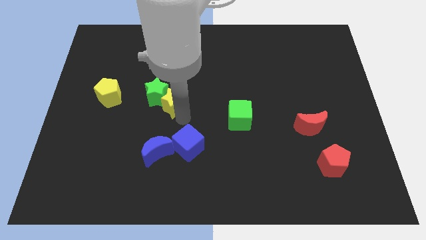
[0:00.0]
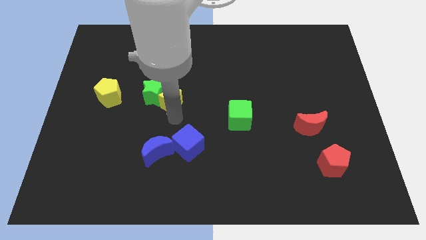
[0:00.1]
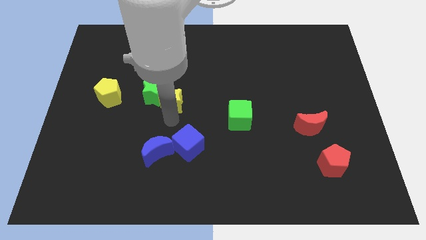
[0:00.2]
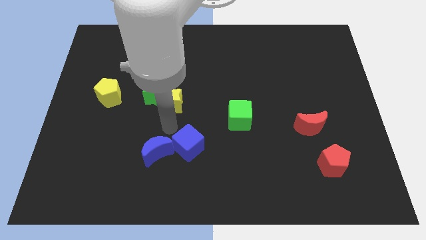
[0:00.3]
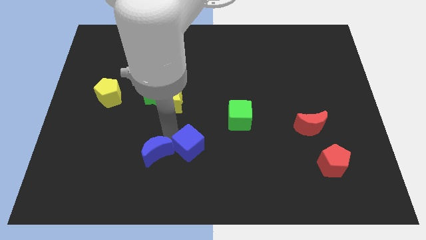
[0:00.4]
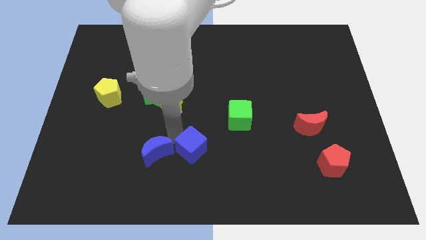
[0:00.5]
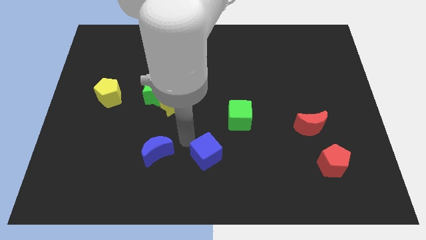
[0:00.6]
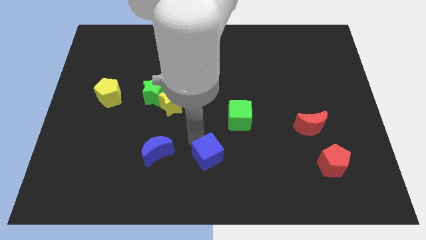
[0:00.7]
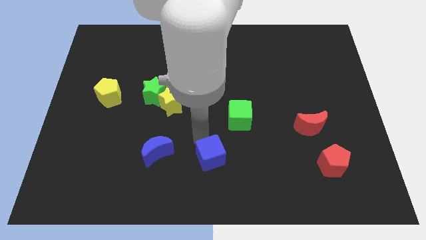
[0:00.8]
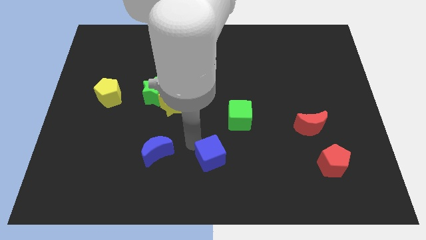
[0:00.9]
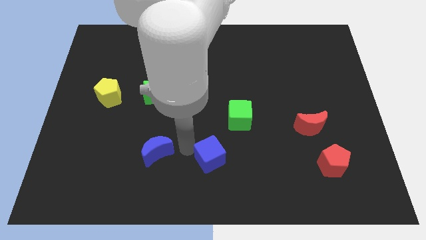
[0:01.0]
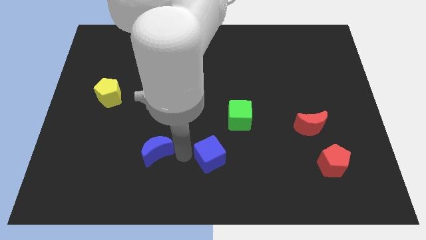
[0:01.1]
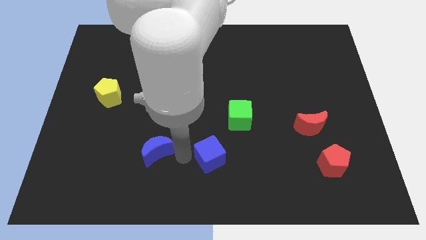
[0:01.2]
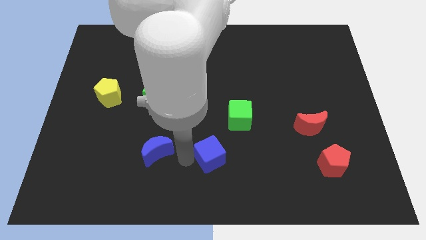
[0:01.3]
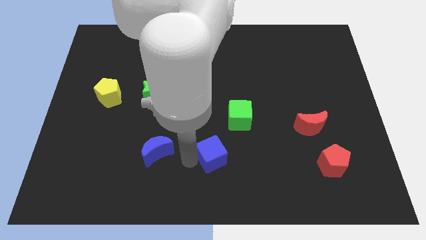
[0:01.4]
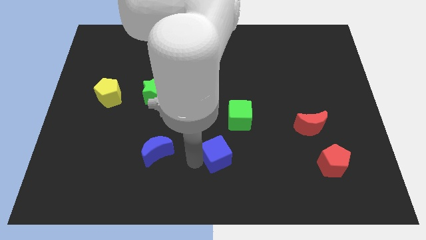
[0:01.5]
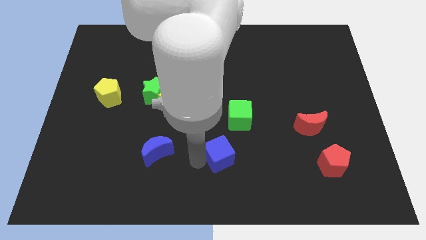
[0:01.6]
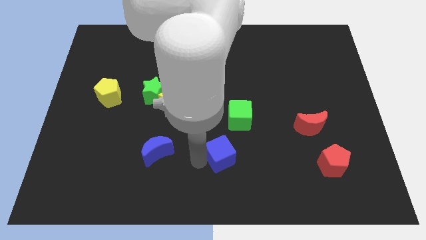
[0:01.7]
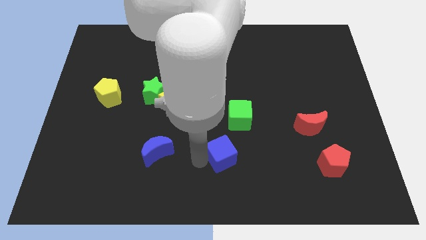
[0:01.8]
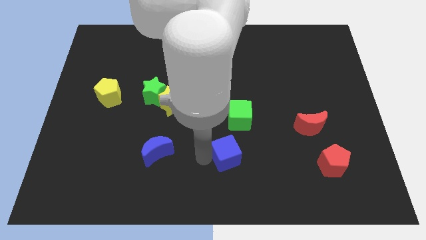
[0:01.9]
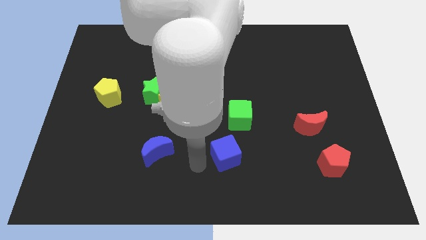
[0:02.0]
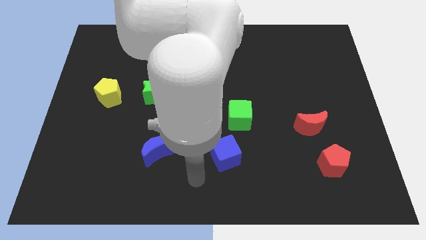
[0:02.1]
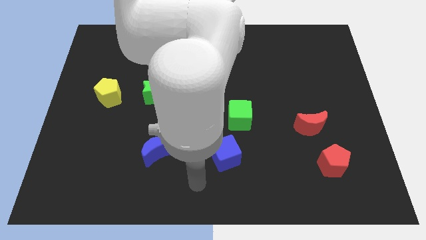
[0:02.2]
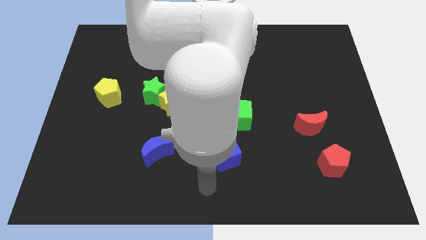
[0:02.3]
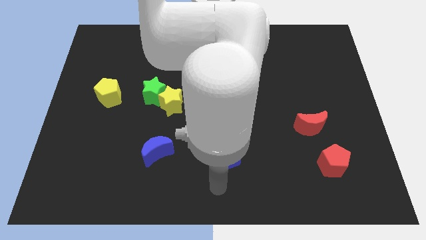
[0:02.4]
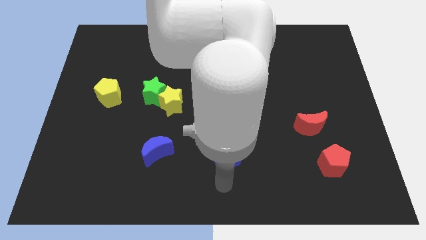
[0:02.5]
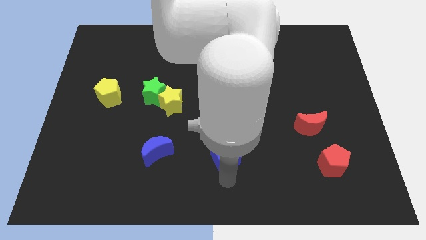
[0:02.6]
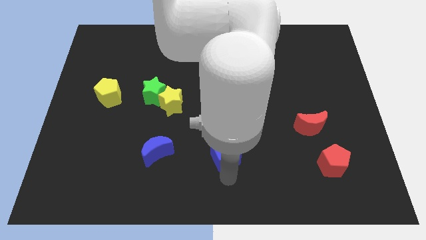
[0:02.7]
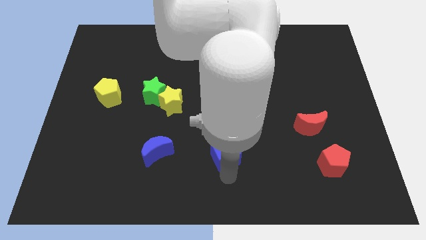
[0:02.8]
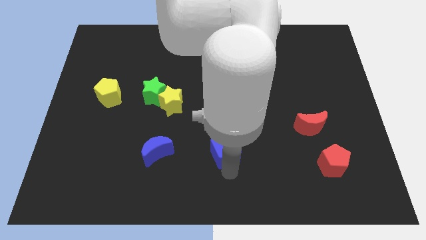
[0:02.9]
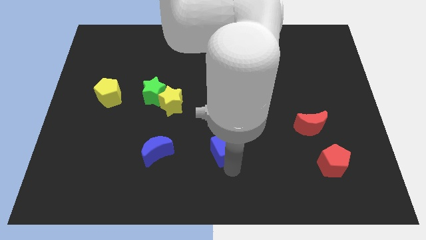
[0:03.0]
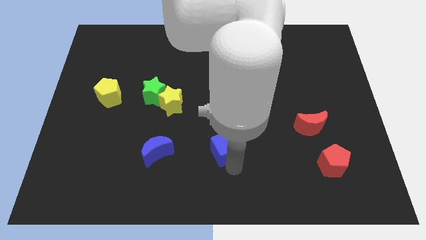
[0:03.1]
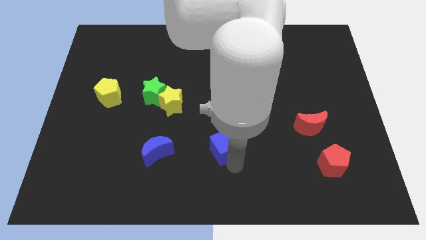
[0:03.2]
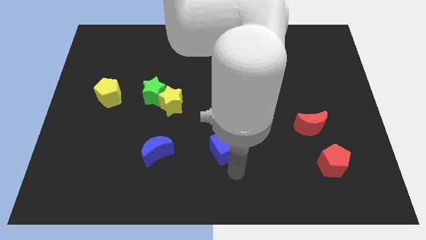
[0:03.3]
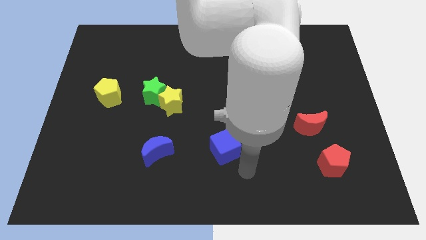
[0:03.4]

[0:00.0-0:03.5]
place blue cube below green cube

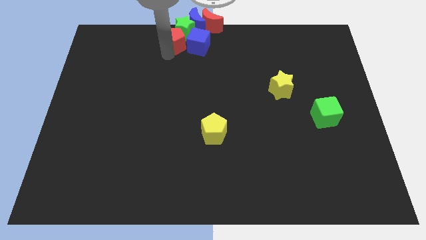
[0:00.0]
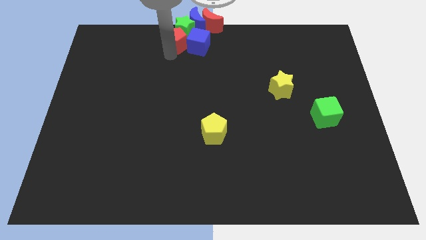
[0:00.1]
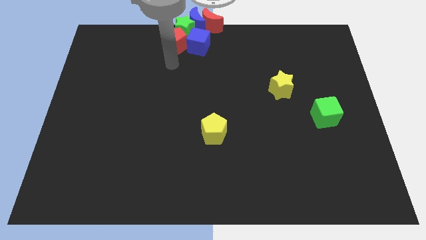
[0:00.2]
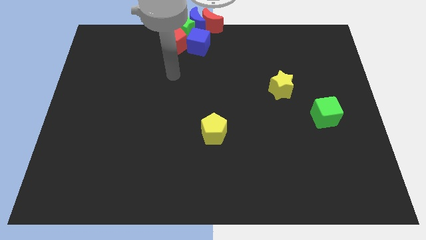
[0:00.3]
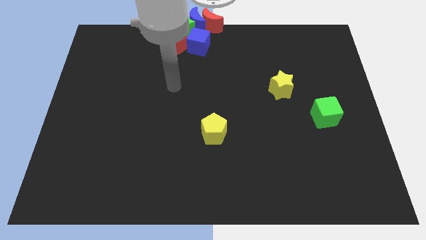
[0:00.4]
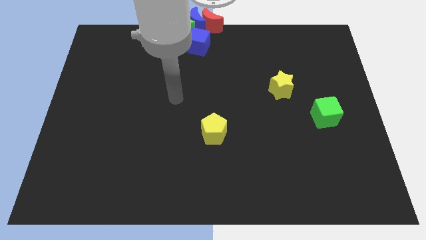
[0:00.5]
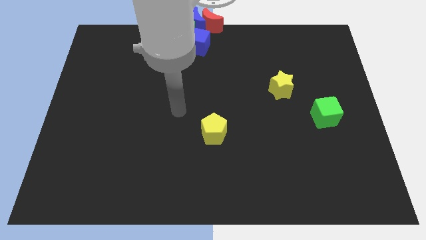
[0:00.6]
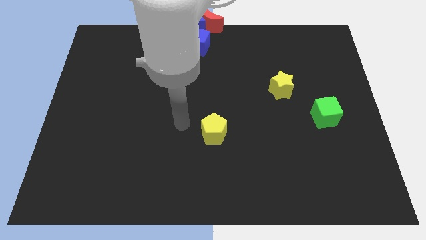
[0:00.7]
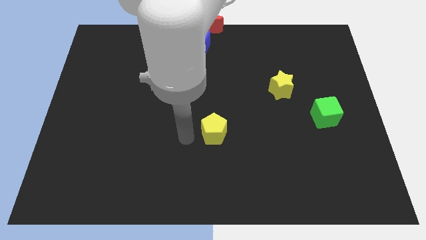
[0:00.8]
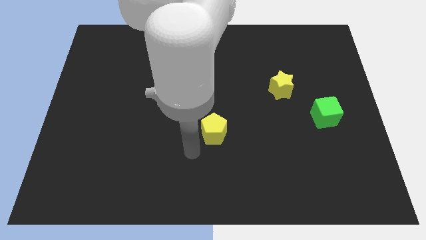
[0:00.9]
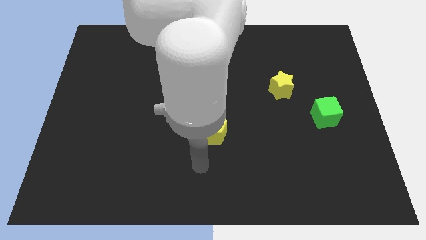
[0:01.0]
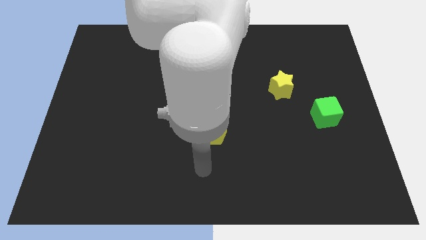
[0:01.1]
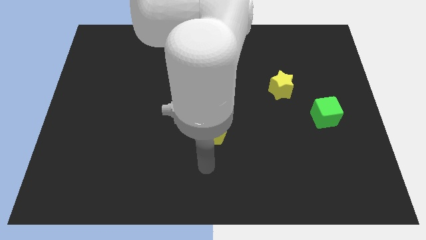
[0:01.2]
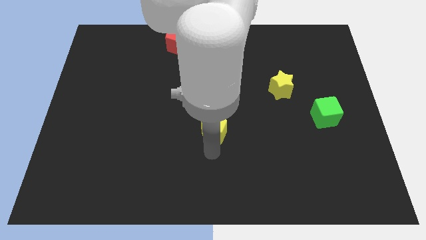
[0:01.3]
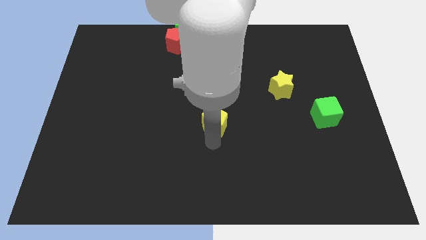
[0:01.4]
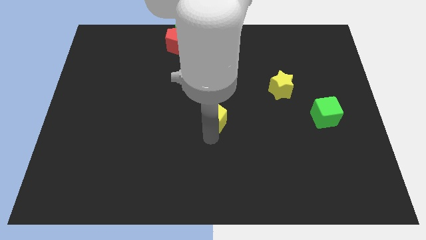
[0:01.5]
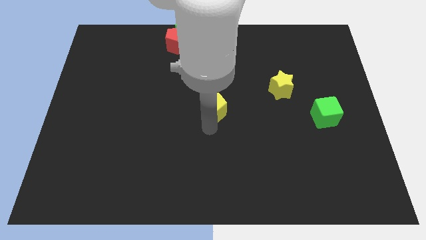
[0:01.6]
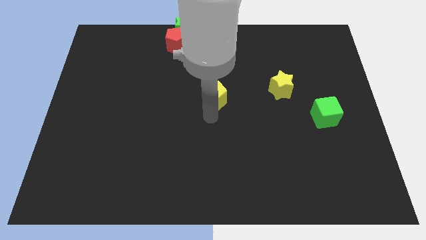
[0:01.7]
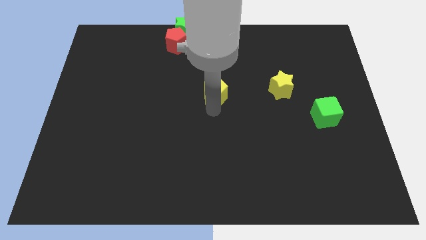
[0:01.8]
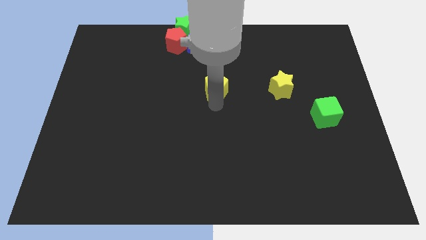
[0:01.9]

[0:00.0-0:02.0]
move the yellow pentagon at the center of the board

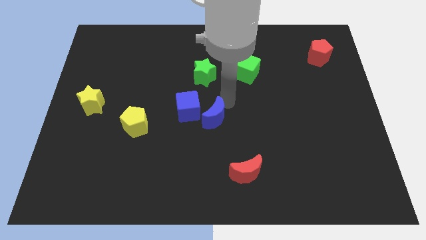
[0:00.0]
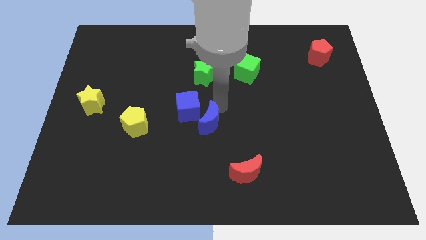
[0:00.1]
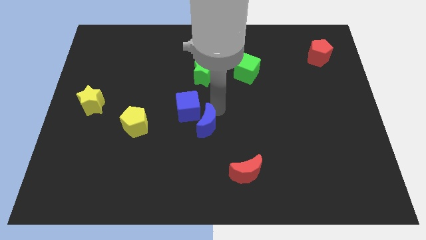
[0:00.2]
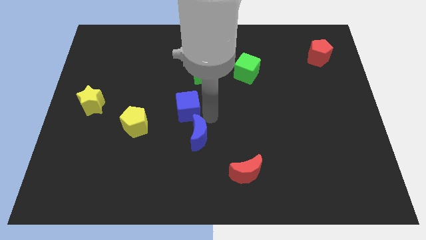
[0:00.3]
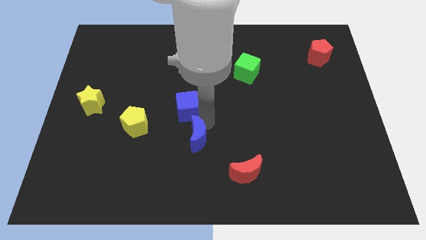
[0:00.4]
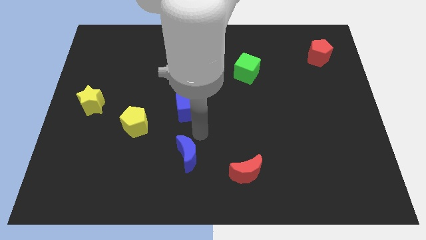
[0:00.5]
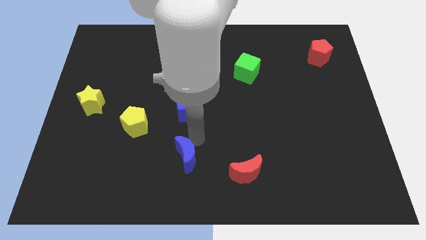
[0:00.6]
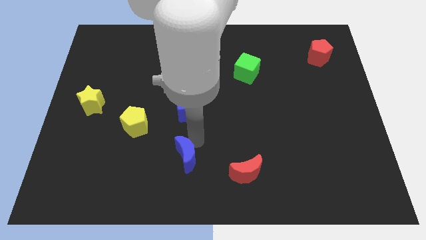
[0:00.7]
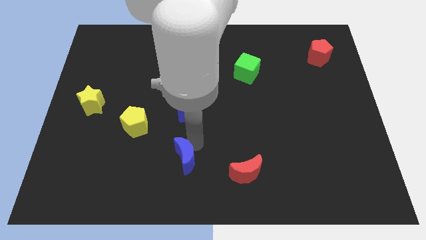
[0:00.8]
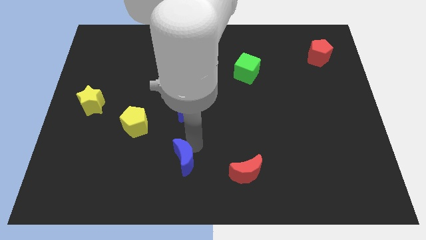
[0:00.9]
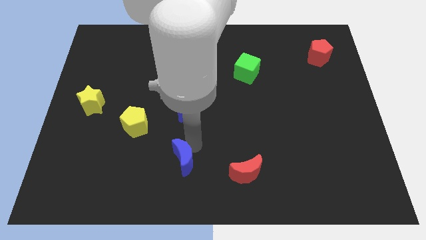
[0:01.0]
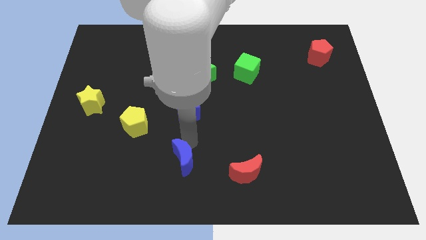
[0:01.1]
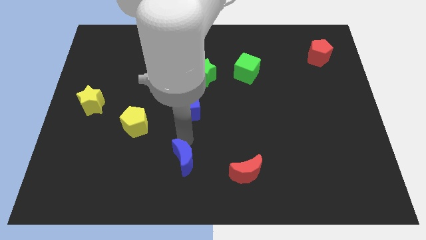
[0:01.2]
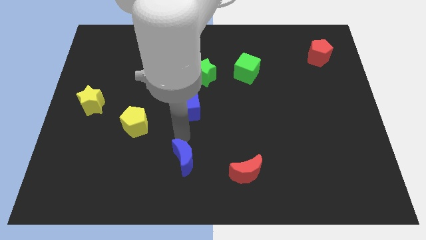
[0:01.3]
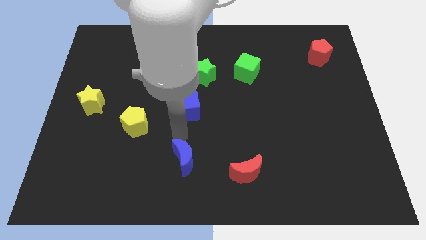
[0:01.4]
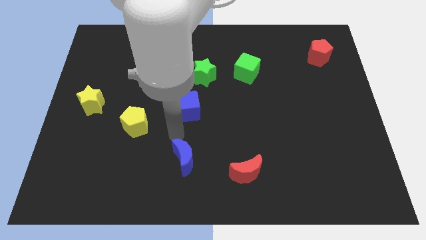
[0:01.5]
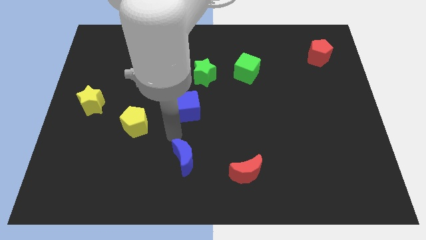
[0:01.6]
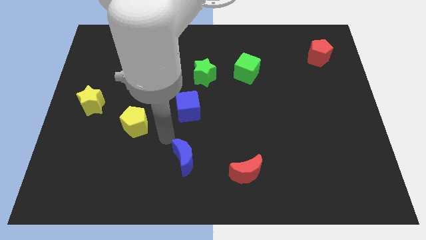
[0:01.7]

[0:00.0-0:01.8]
place the blue moon to the left of the red moon

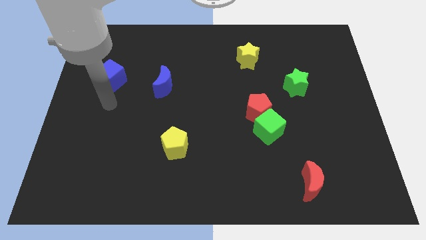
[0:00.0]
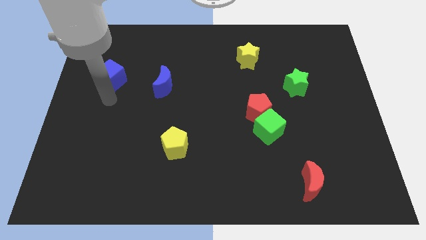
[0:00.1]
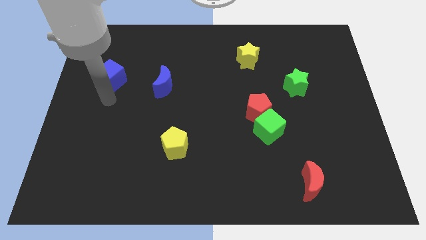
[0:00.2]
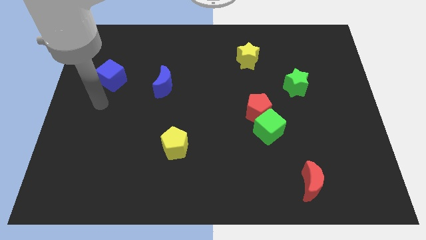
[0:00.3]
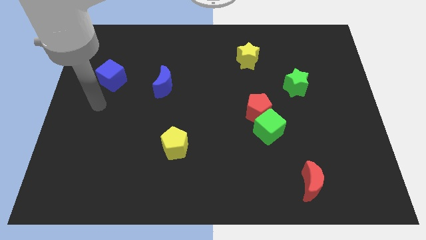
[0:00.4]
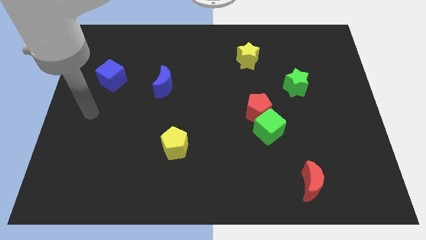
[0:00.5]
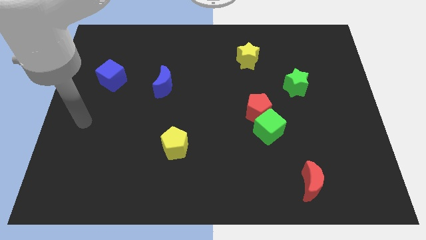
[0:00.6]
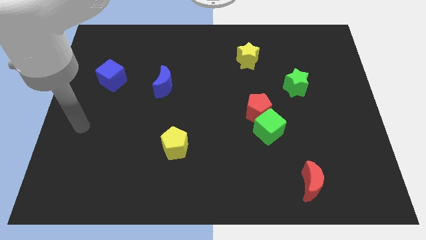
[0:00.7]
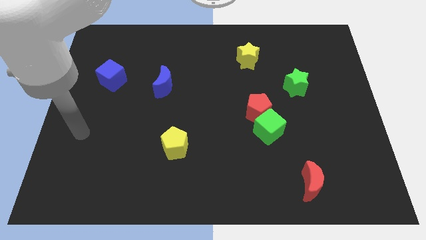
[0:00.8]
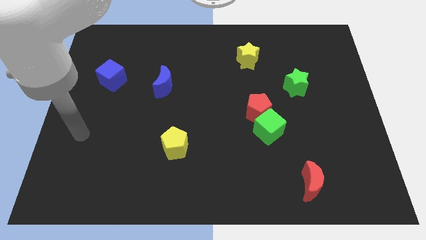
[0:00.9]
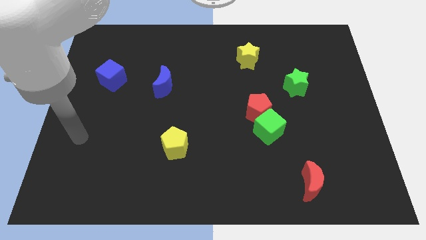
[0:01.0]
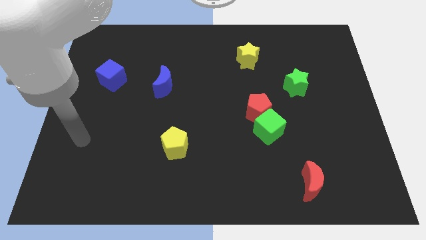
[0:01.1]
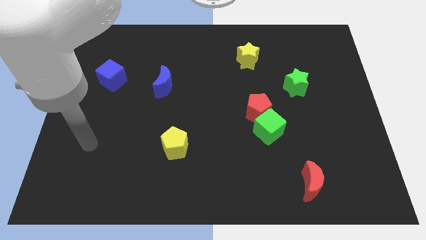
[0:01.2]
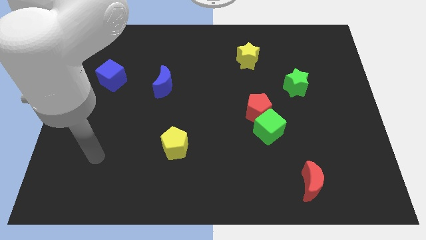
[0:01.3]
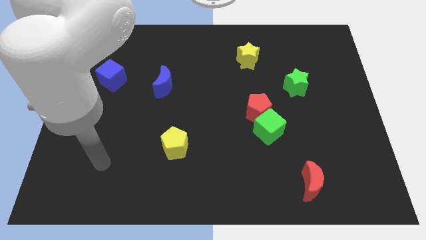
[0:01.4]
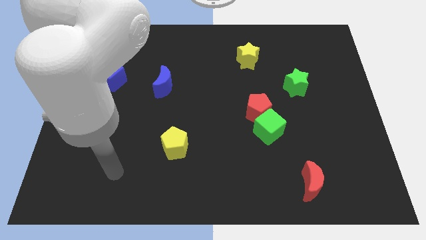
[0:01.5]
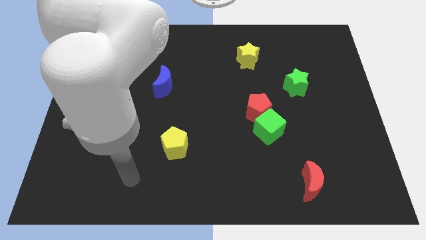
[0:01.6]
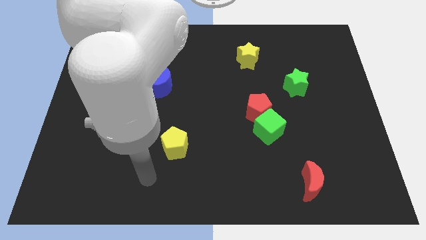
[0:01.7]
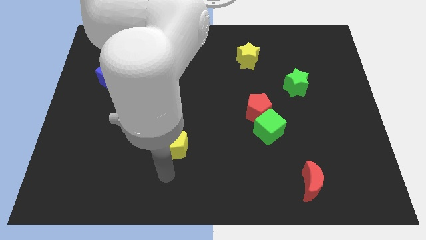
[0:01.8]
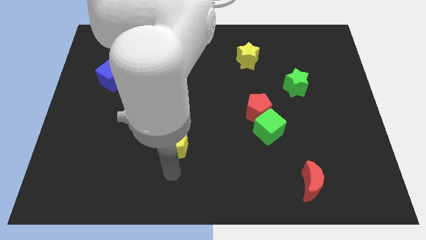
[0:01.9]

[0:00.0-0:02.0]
point your arm to the bottom side of the yellow pentagon
